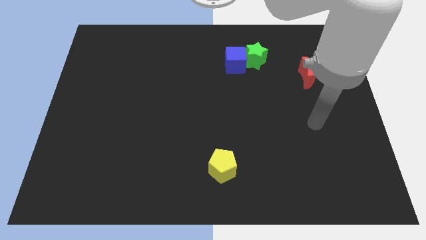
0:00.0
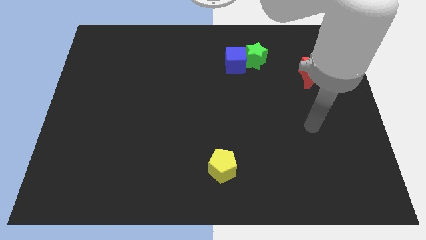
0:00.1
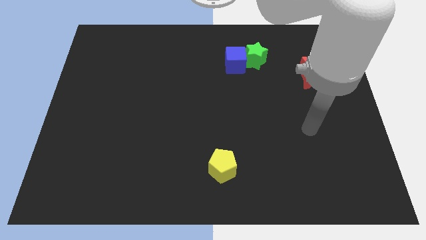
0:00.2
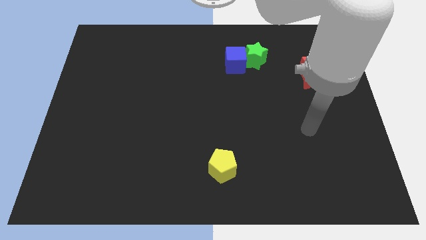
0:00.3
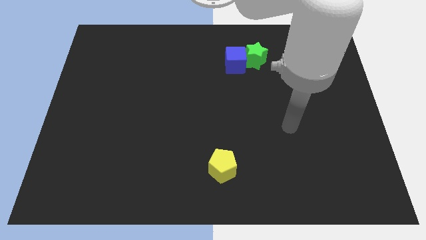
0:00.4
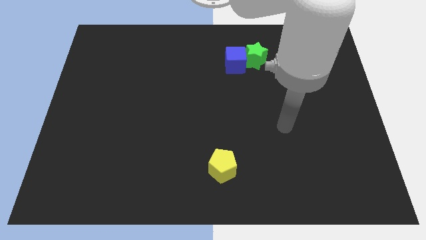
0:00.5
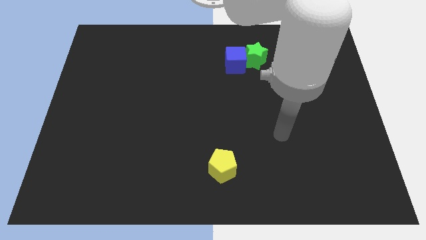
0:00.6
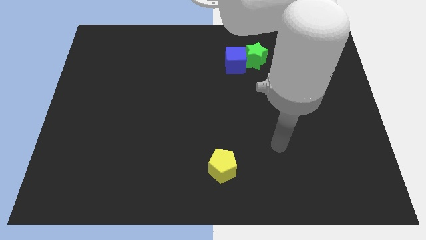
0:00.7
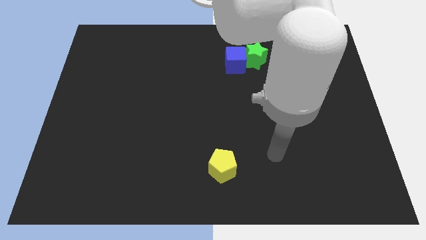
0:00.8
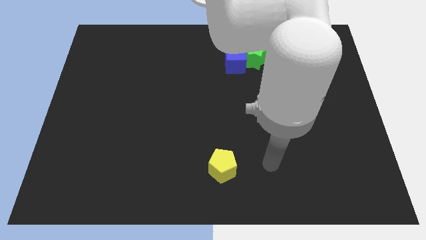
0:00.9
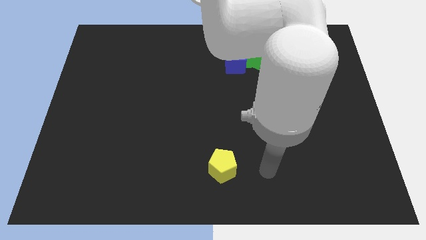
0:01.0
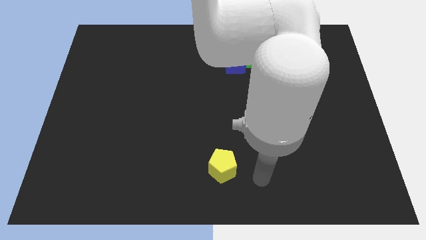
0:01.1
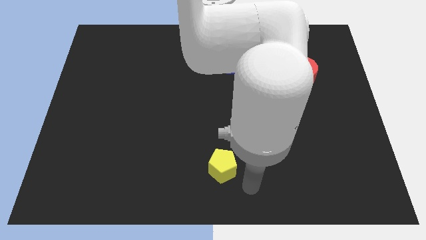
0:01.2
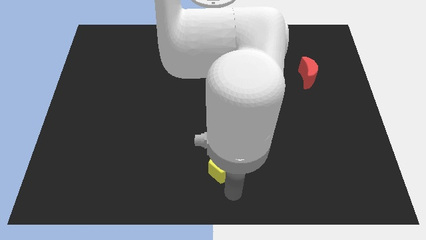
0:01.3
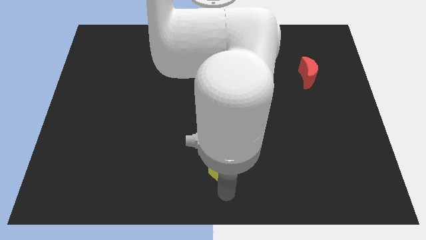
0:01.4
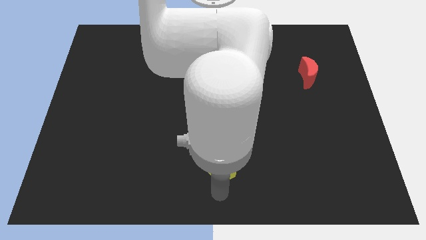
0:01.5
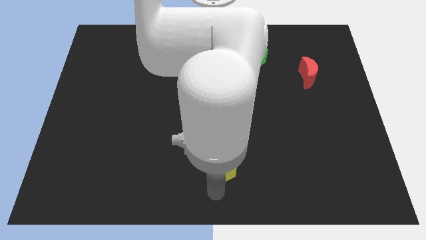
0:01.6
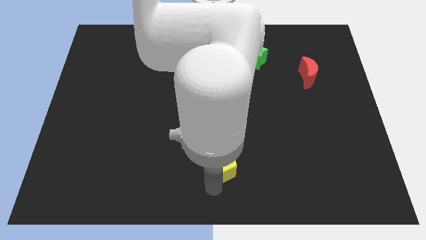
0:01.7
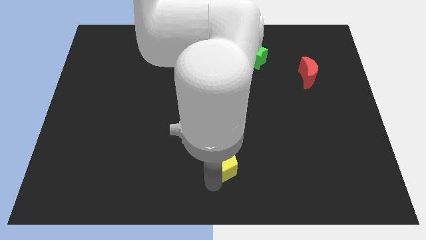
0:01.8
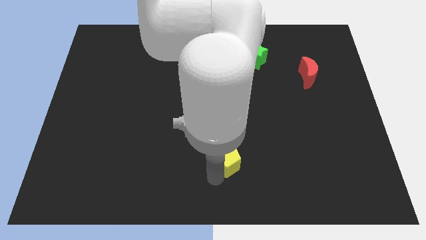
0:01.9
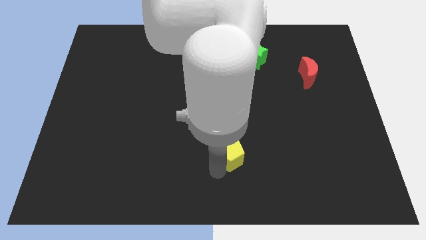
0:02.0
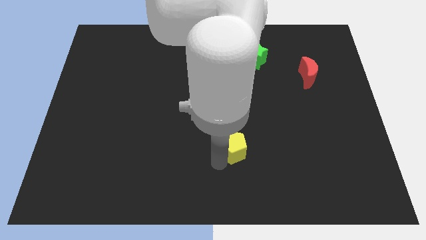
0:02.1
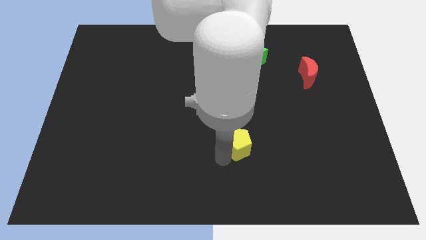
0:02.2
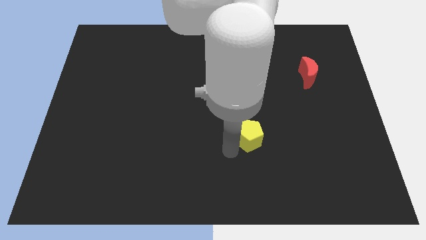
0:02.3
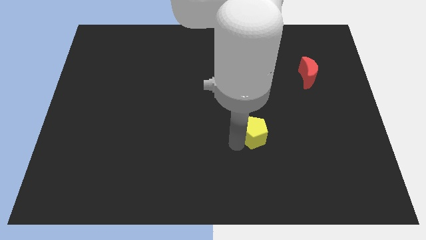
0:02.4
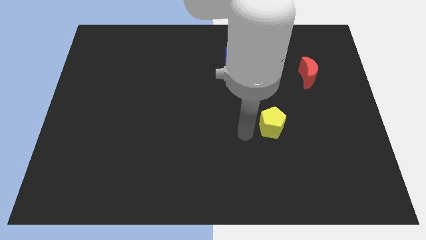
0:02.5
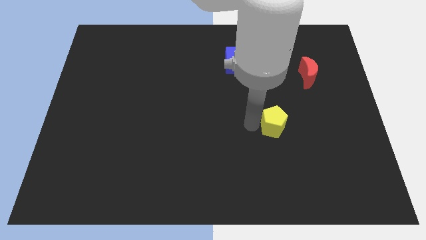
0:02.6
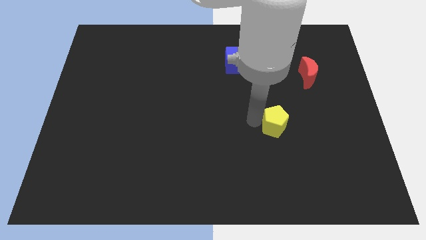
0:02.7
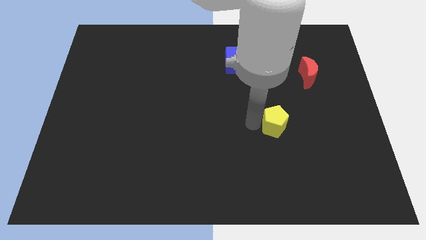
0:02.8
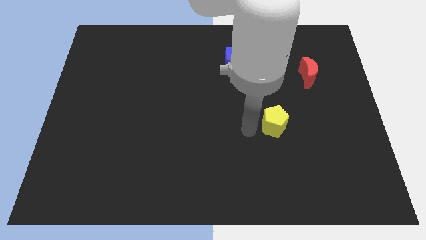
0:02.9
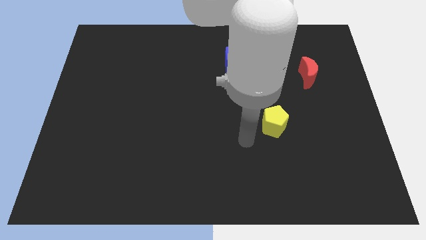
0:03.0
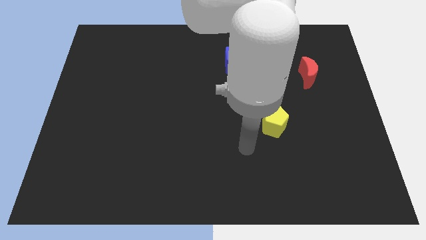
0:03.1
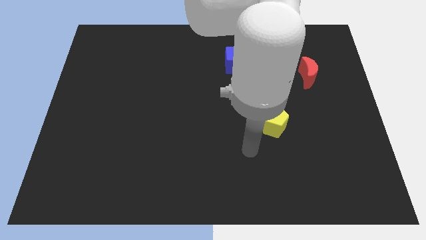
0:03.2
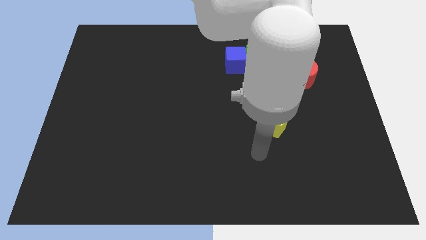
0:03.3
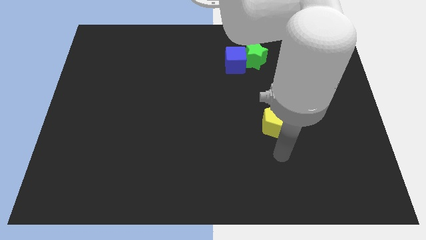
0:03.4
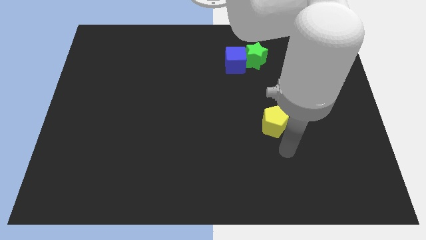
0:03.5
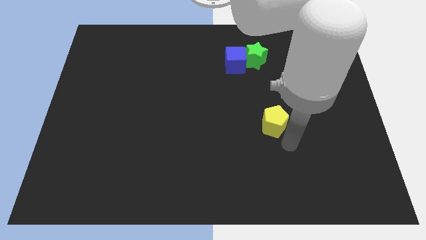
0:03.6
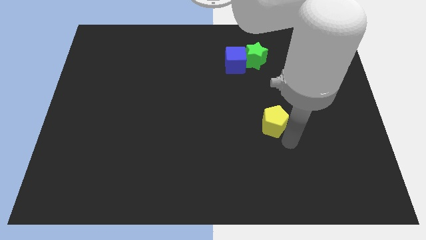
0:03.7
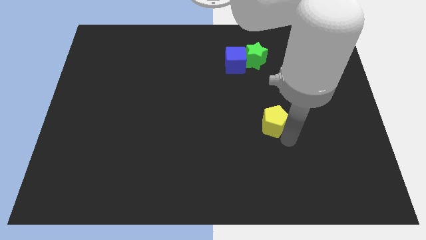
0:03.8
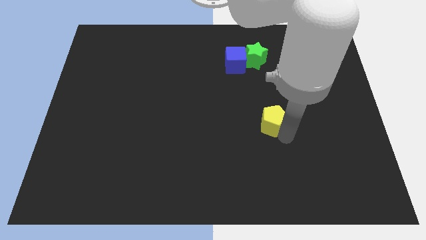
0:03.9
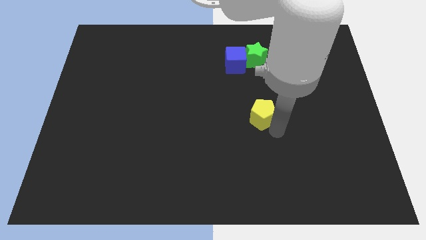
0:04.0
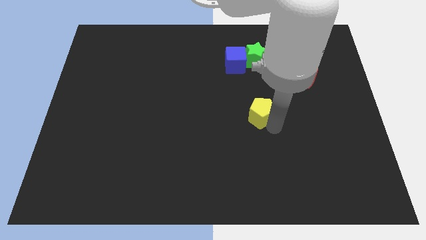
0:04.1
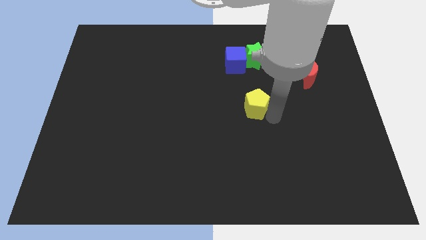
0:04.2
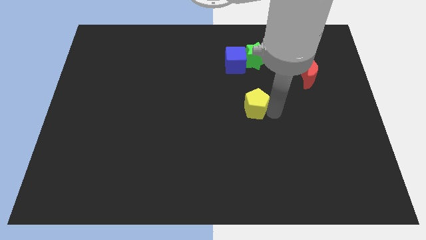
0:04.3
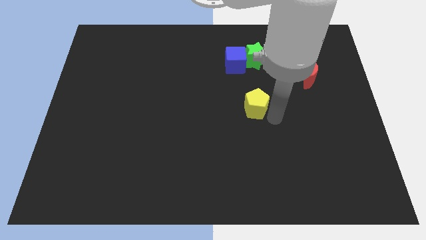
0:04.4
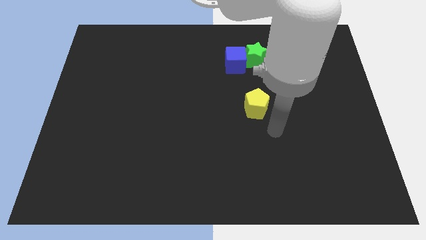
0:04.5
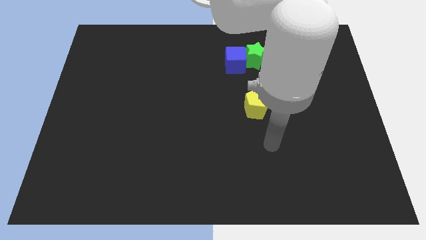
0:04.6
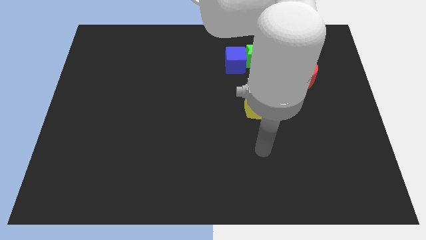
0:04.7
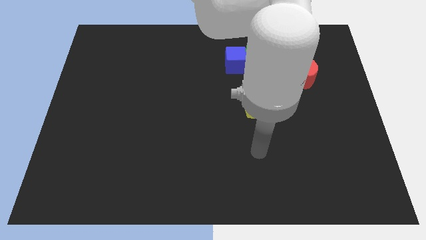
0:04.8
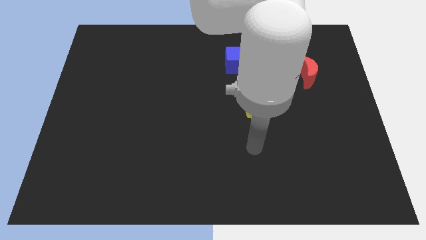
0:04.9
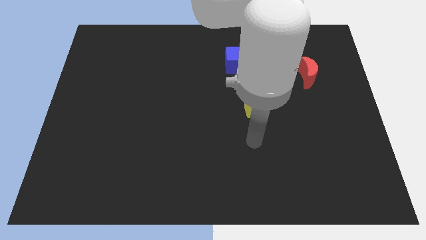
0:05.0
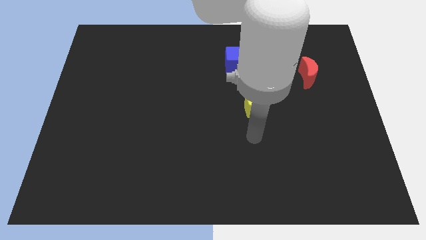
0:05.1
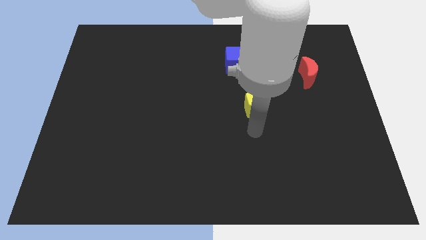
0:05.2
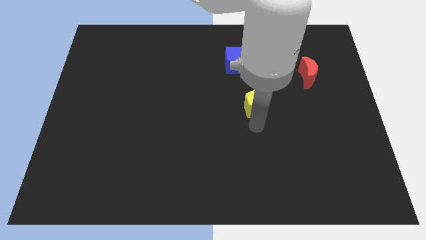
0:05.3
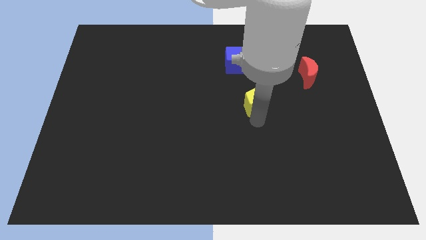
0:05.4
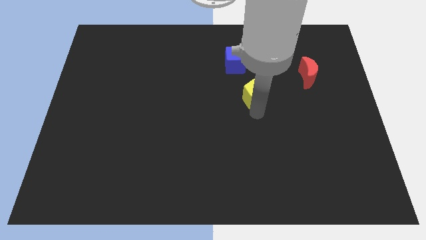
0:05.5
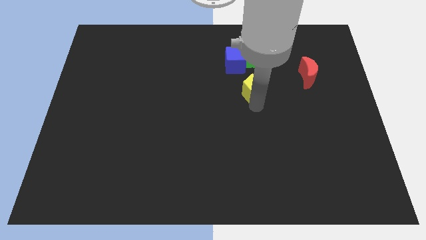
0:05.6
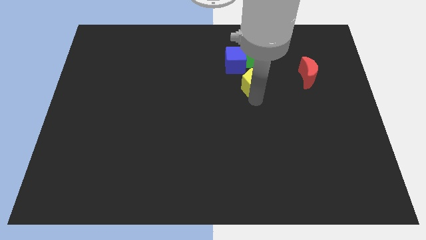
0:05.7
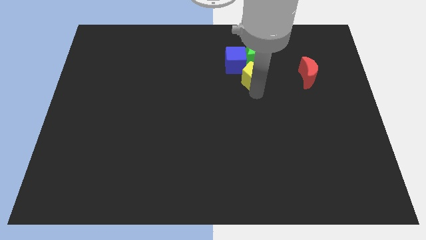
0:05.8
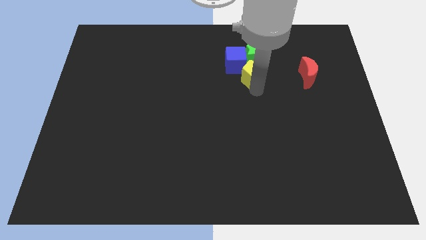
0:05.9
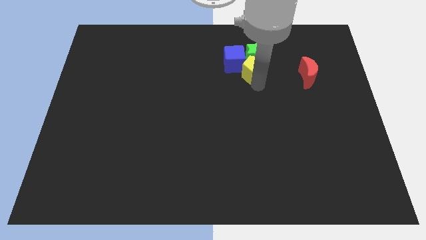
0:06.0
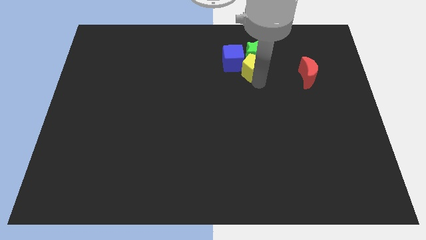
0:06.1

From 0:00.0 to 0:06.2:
push the yellow pentagon towards the star

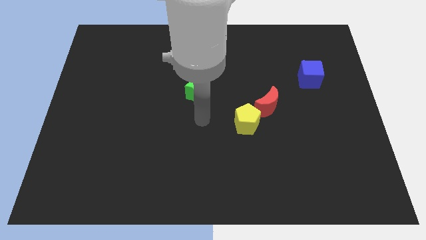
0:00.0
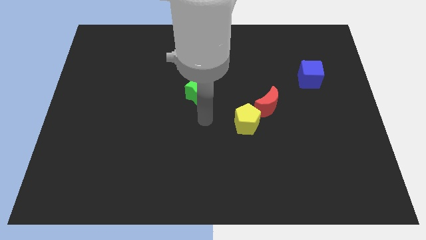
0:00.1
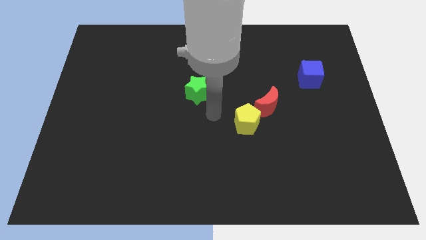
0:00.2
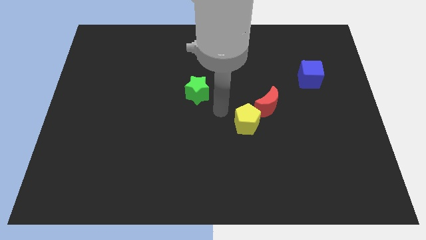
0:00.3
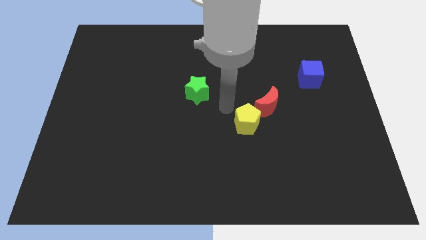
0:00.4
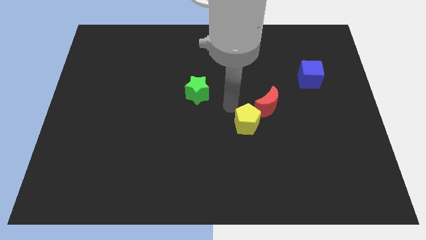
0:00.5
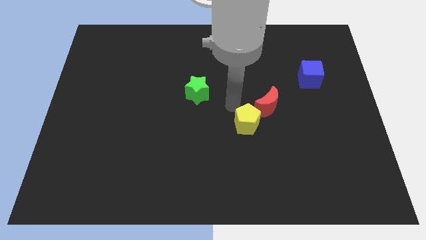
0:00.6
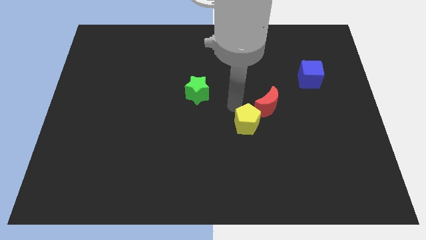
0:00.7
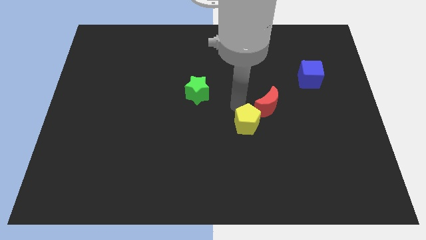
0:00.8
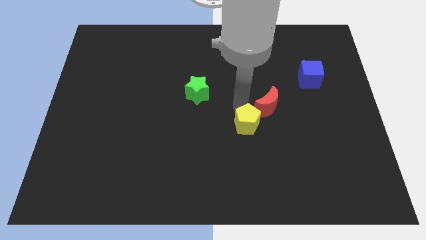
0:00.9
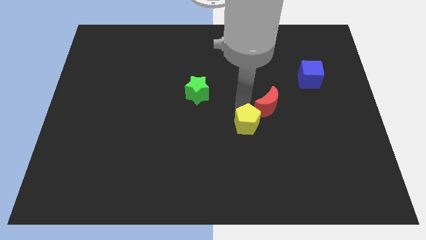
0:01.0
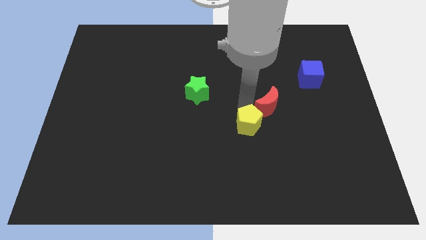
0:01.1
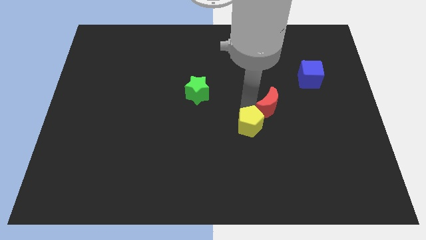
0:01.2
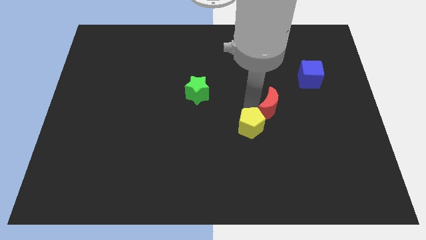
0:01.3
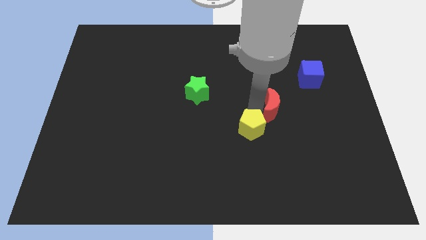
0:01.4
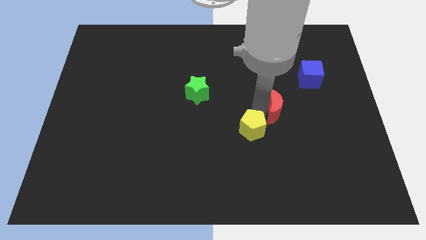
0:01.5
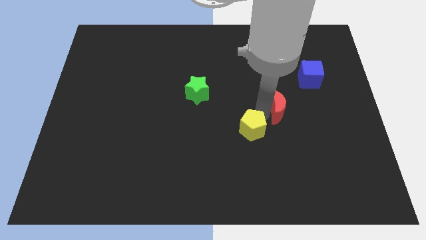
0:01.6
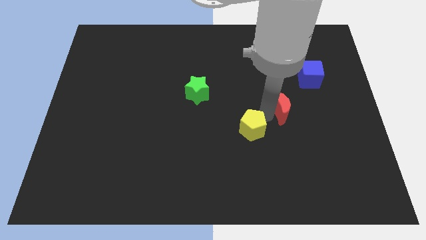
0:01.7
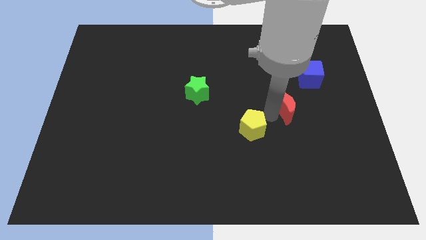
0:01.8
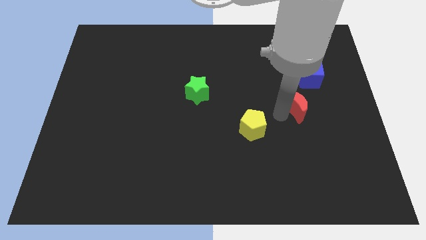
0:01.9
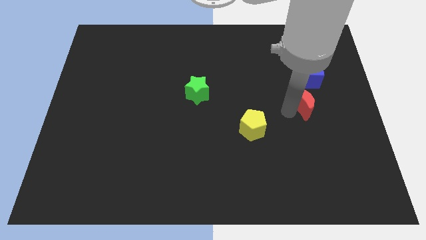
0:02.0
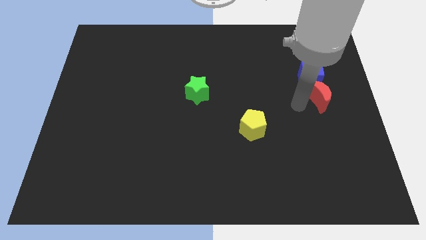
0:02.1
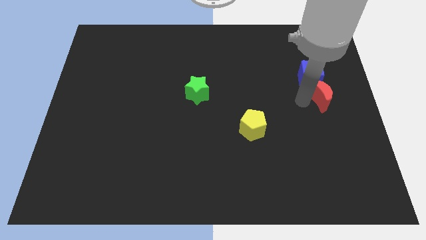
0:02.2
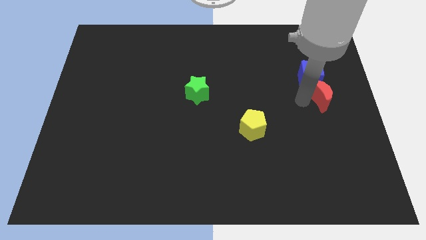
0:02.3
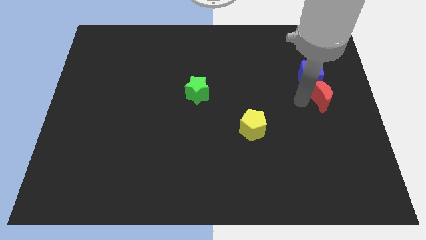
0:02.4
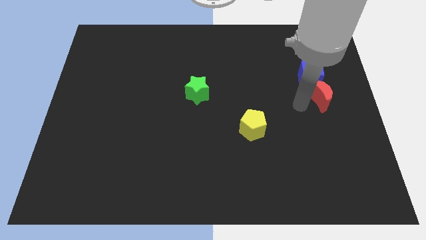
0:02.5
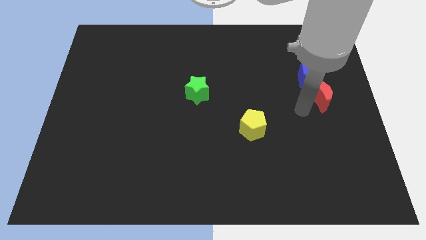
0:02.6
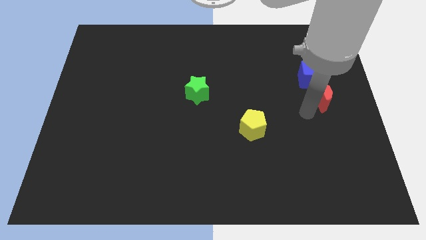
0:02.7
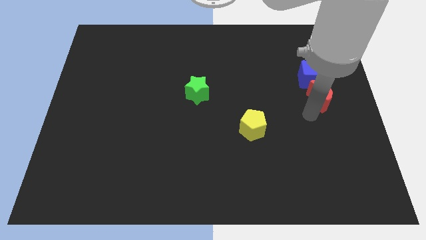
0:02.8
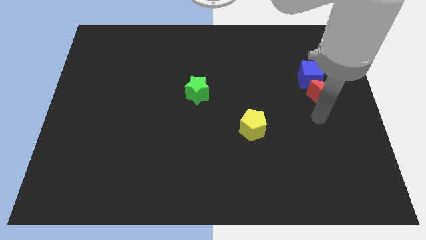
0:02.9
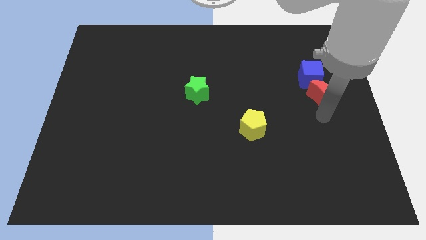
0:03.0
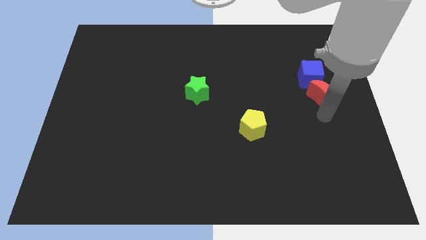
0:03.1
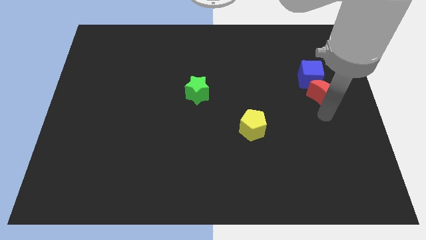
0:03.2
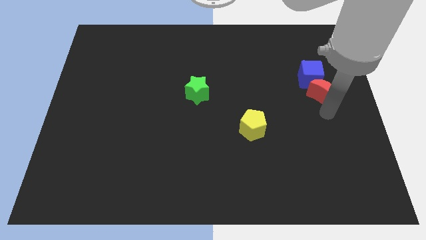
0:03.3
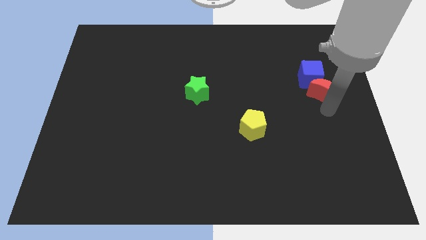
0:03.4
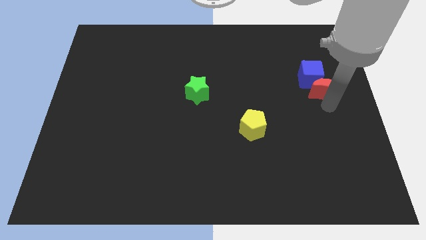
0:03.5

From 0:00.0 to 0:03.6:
move the red moon towards the blue cube
